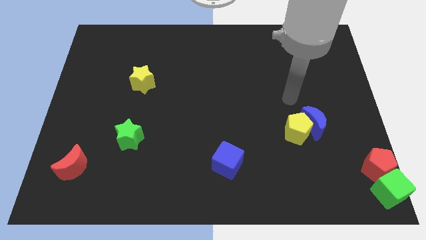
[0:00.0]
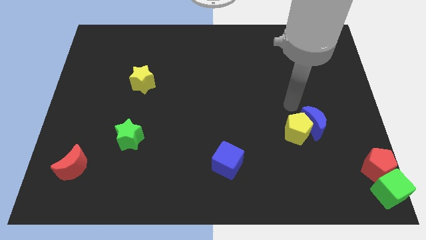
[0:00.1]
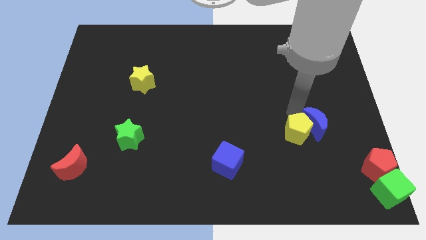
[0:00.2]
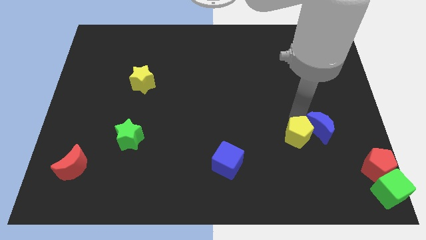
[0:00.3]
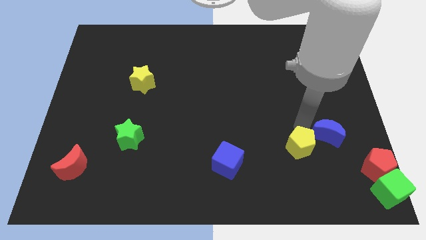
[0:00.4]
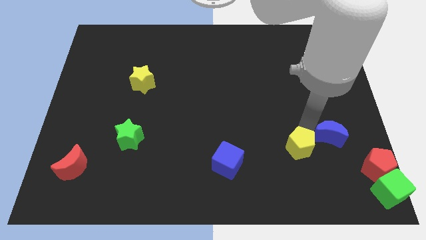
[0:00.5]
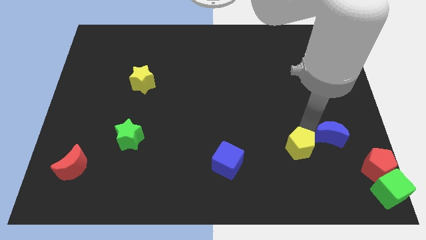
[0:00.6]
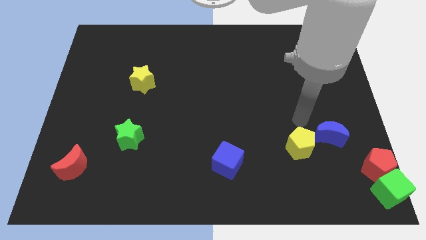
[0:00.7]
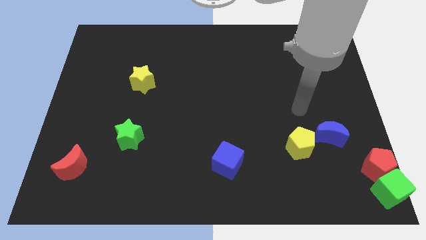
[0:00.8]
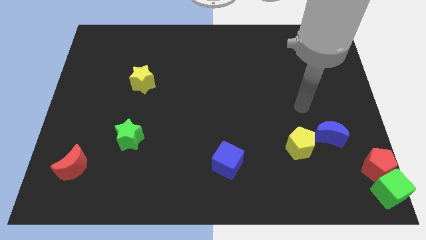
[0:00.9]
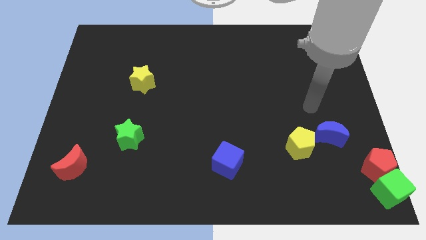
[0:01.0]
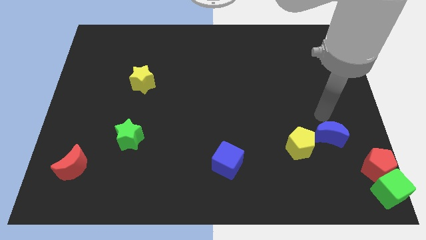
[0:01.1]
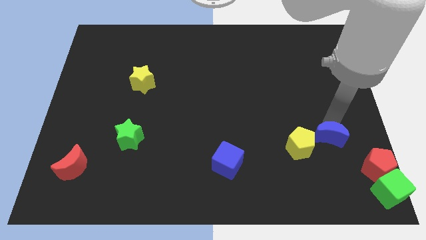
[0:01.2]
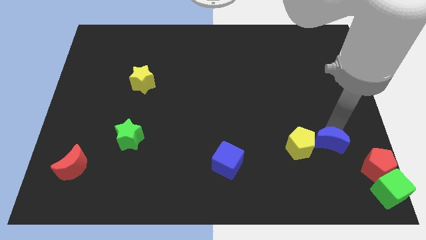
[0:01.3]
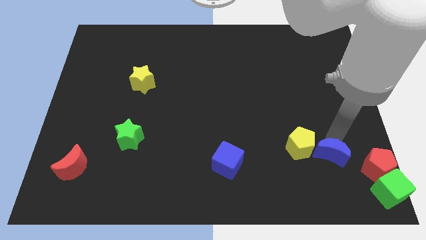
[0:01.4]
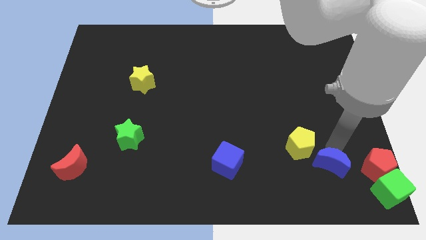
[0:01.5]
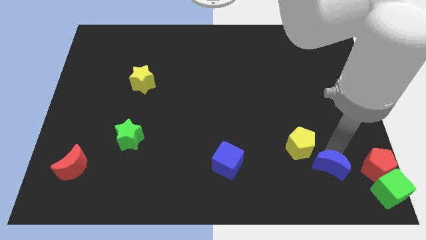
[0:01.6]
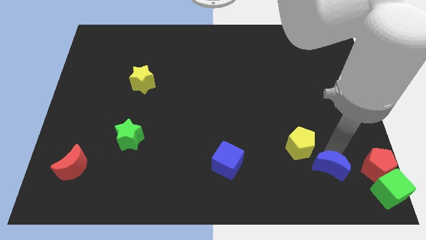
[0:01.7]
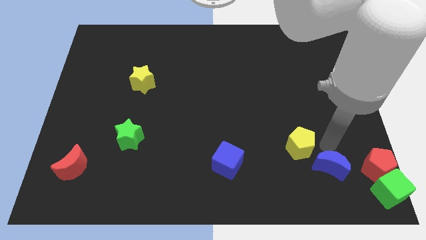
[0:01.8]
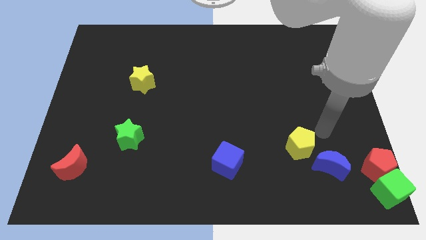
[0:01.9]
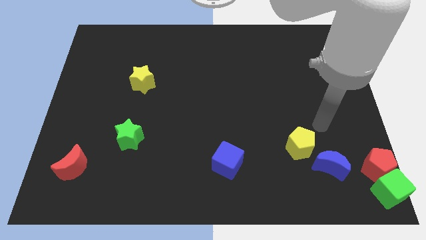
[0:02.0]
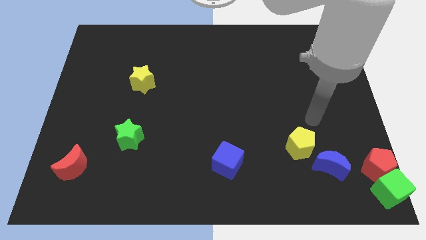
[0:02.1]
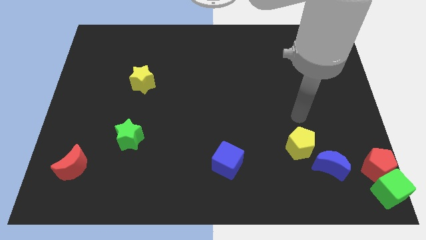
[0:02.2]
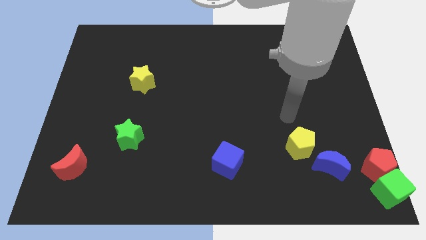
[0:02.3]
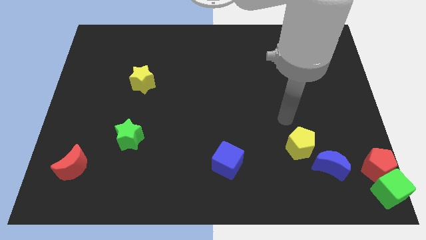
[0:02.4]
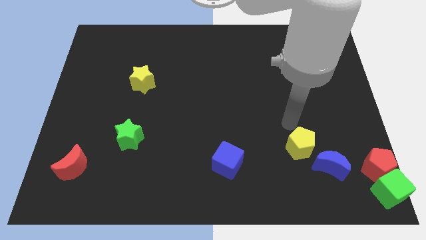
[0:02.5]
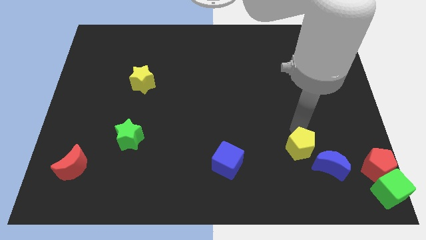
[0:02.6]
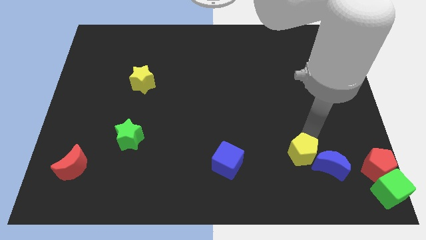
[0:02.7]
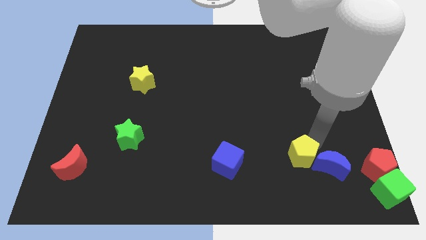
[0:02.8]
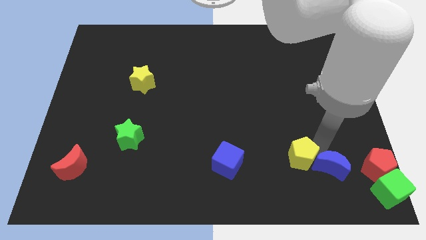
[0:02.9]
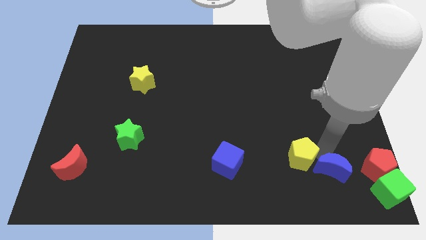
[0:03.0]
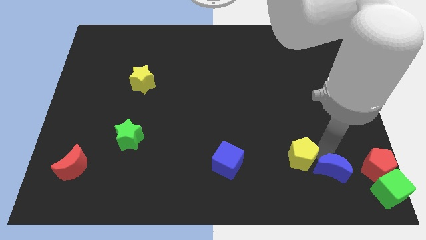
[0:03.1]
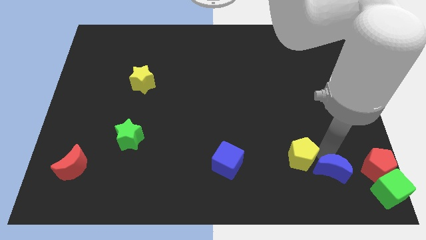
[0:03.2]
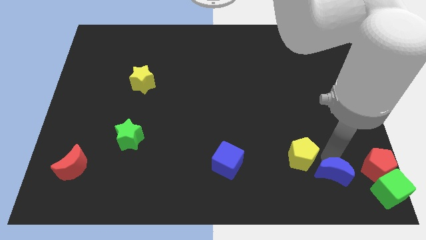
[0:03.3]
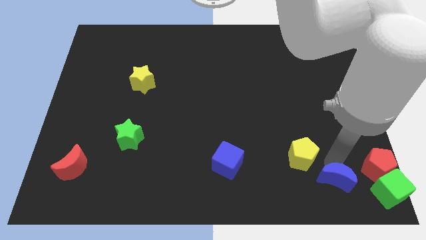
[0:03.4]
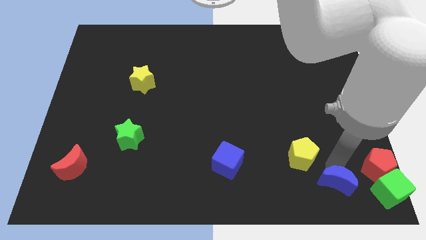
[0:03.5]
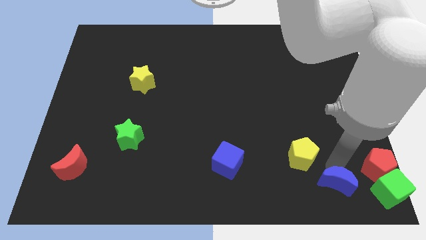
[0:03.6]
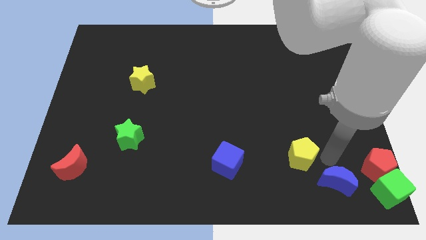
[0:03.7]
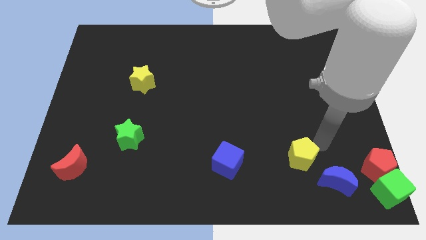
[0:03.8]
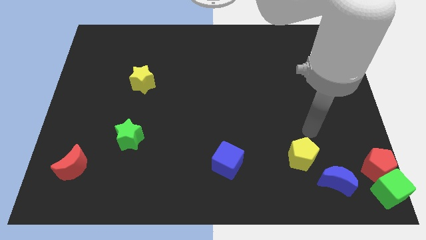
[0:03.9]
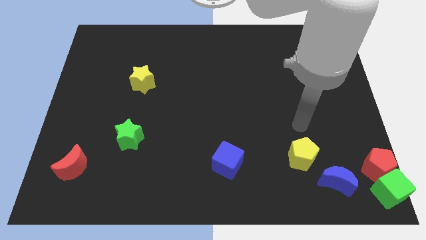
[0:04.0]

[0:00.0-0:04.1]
push the blue crescent towards the bottom of the board

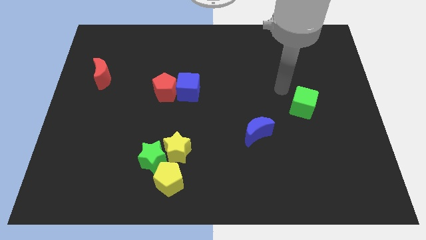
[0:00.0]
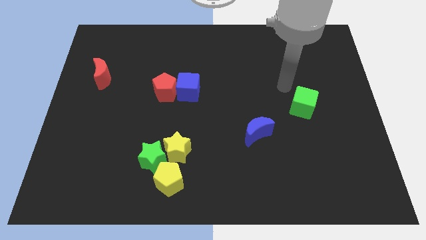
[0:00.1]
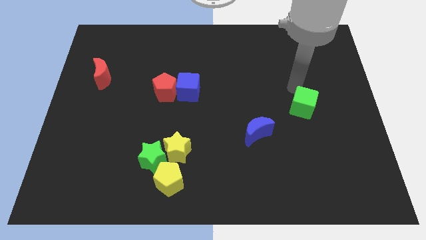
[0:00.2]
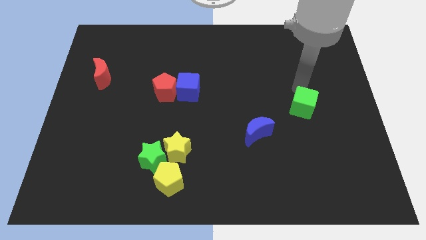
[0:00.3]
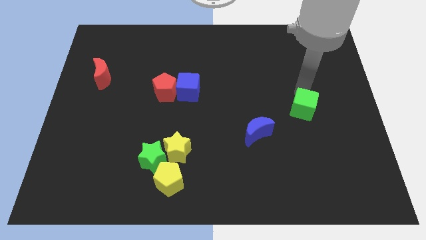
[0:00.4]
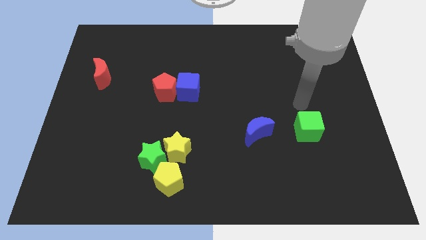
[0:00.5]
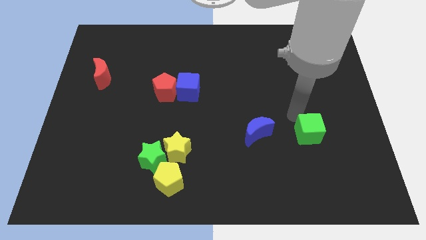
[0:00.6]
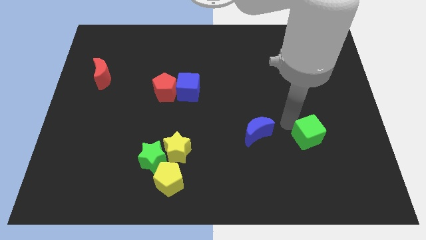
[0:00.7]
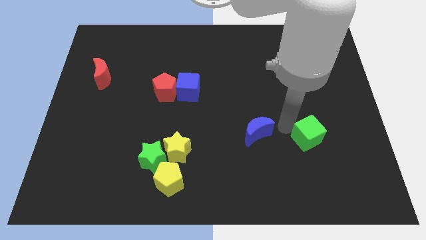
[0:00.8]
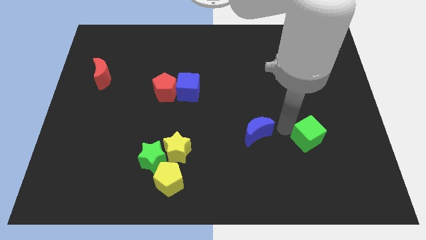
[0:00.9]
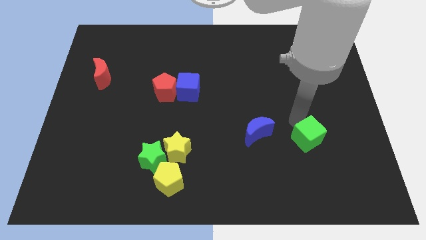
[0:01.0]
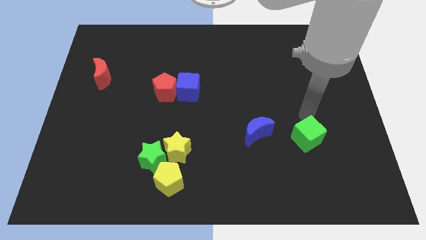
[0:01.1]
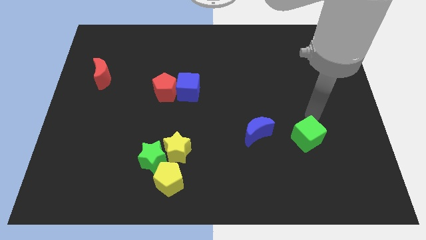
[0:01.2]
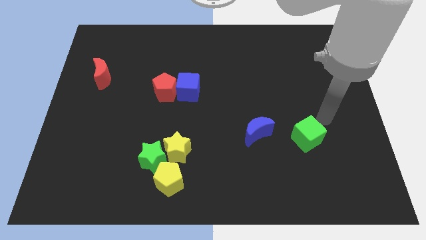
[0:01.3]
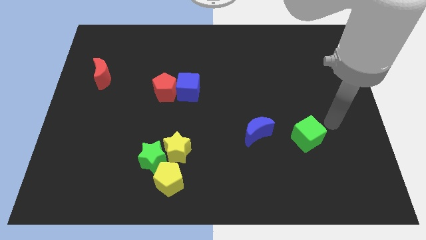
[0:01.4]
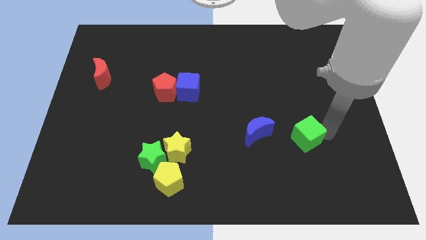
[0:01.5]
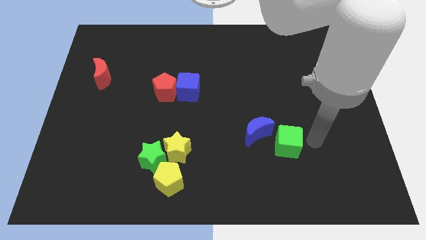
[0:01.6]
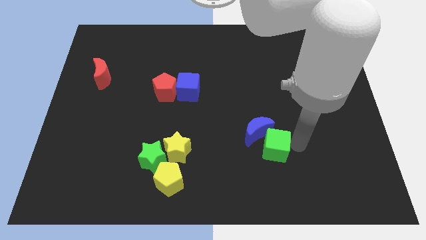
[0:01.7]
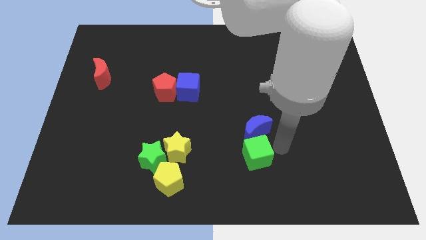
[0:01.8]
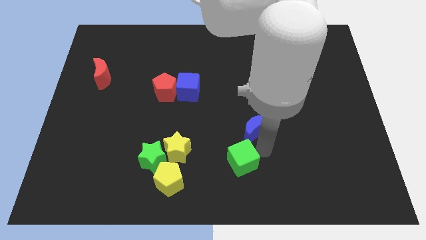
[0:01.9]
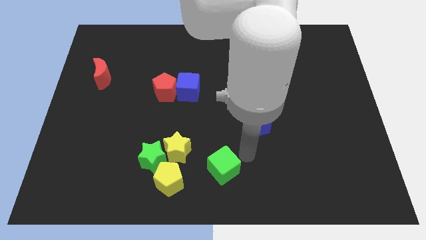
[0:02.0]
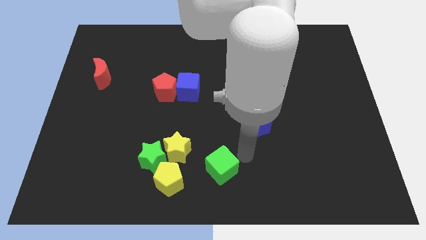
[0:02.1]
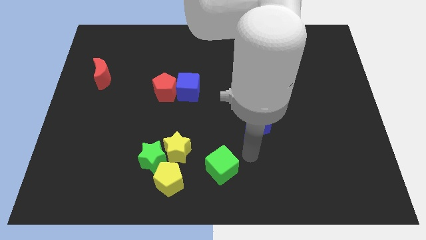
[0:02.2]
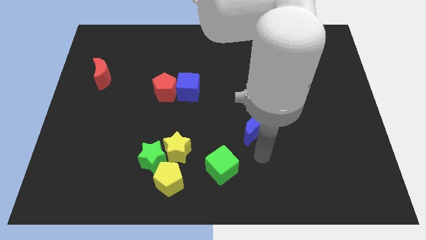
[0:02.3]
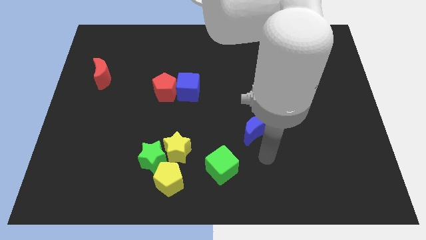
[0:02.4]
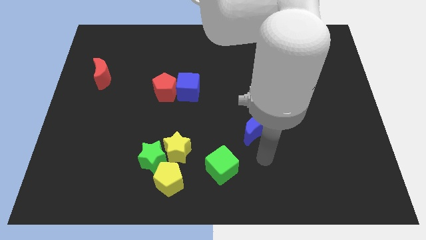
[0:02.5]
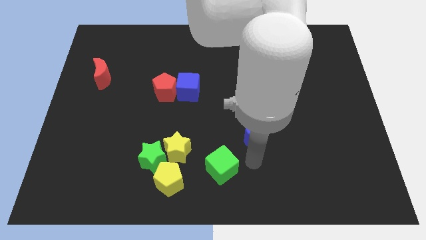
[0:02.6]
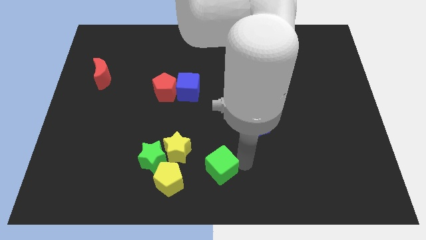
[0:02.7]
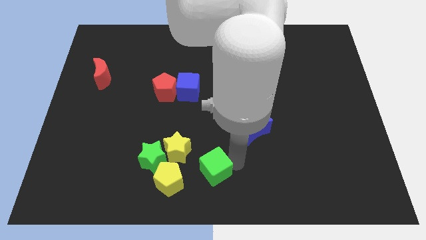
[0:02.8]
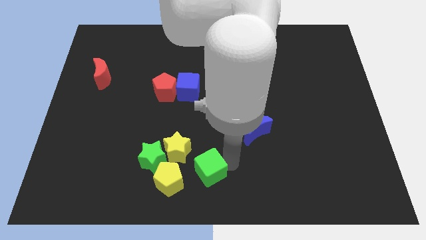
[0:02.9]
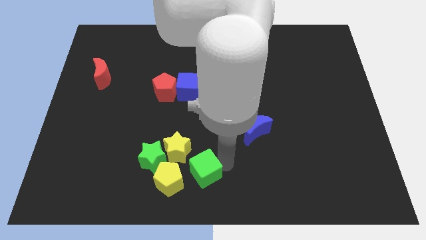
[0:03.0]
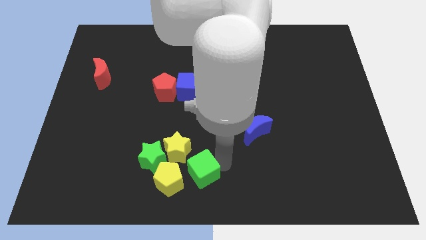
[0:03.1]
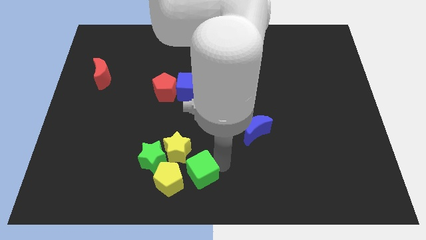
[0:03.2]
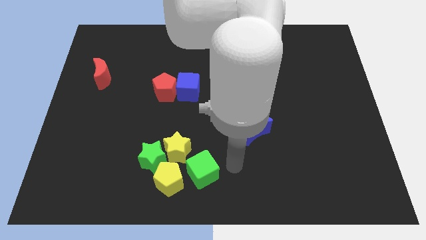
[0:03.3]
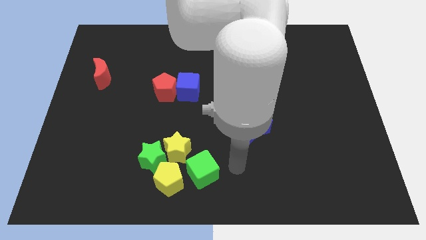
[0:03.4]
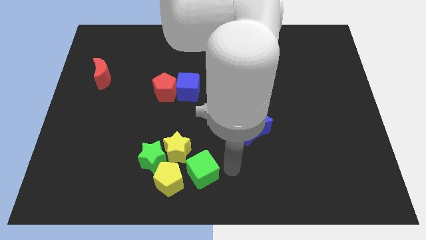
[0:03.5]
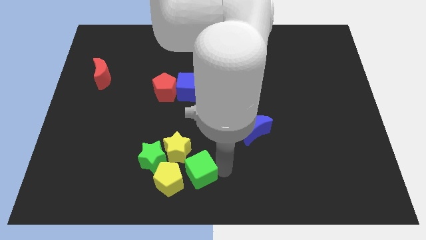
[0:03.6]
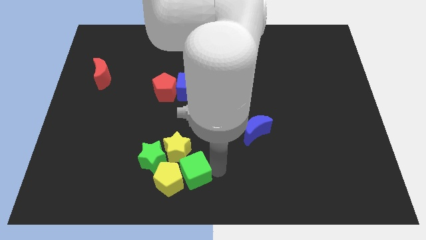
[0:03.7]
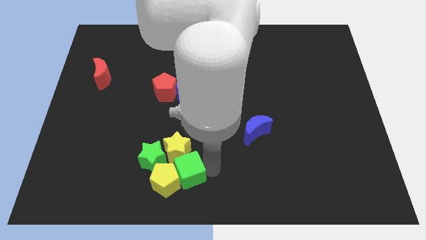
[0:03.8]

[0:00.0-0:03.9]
place green cube into the yellow pentagon

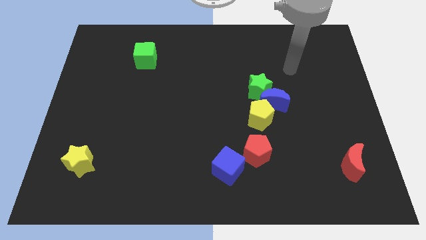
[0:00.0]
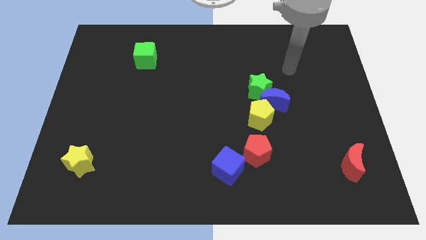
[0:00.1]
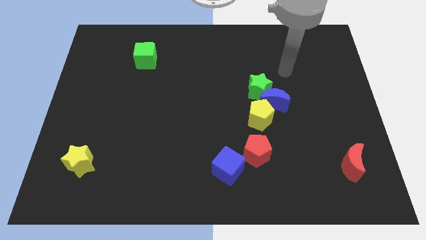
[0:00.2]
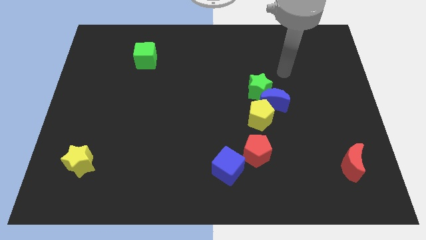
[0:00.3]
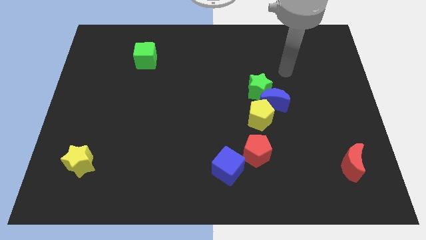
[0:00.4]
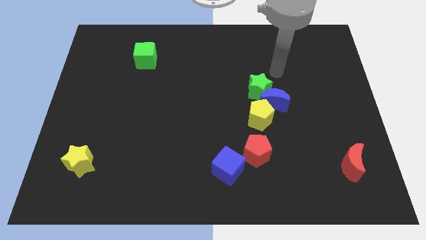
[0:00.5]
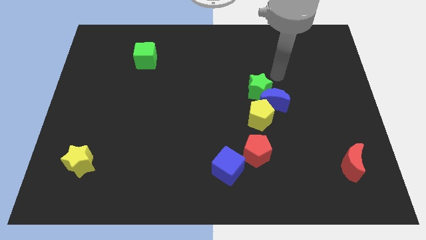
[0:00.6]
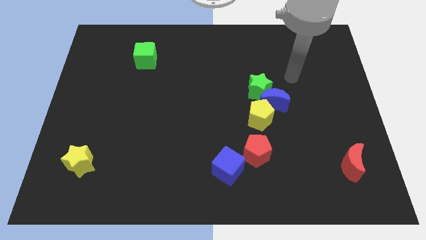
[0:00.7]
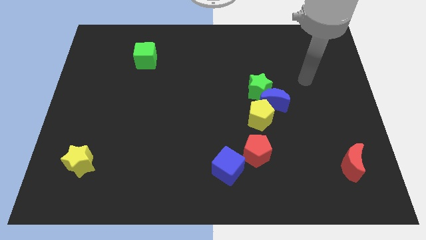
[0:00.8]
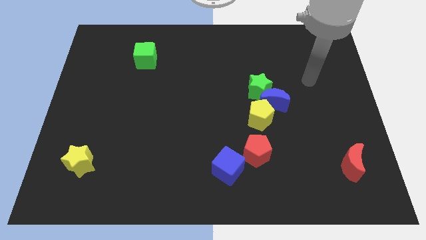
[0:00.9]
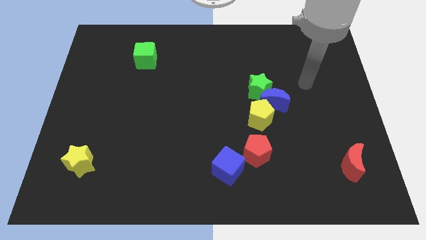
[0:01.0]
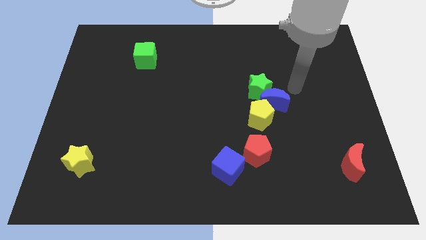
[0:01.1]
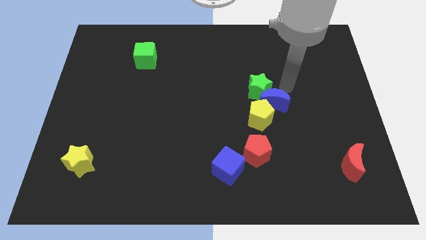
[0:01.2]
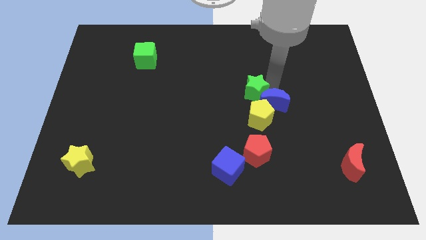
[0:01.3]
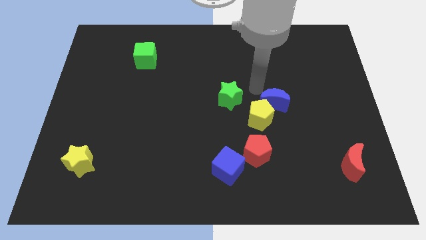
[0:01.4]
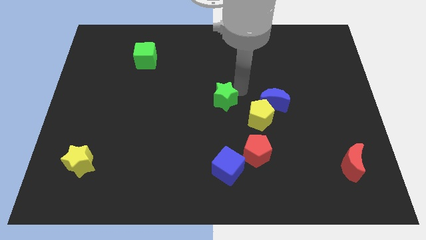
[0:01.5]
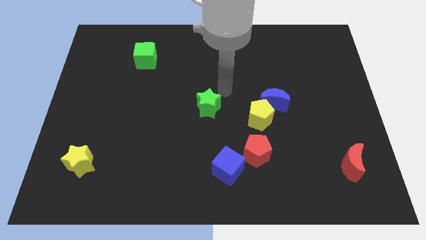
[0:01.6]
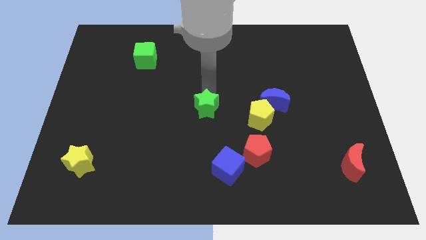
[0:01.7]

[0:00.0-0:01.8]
place green star to the left of yellow pentagon
